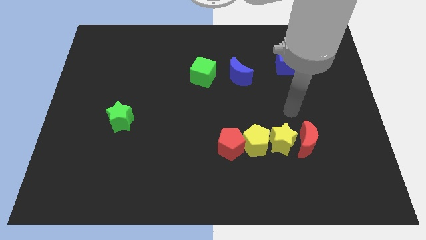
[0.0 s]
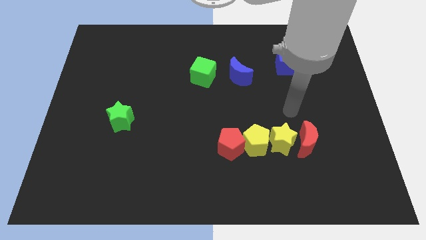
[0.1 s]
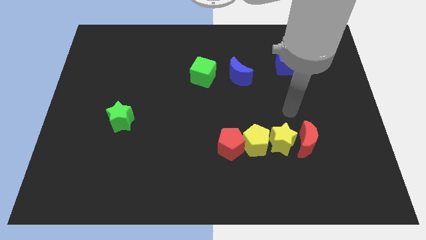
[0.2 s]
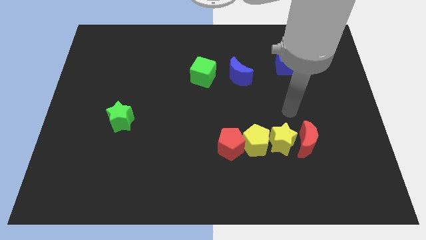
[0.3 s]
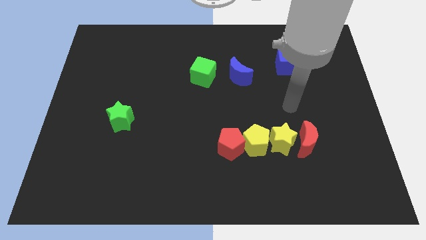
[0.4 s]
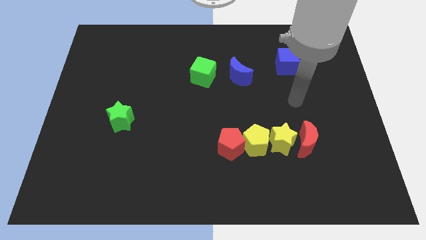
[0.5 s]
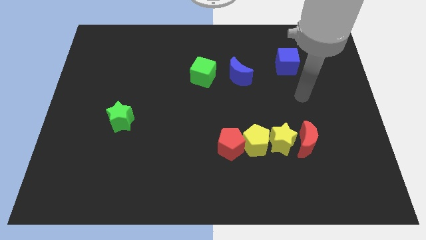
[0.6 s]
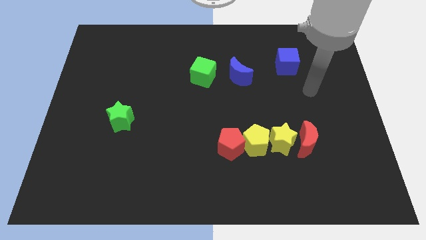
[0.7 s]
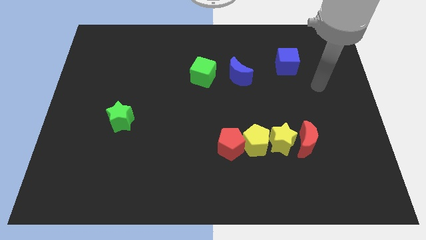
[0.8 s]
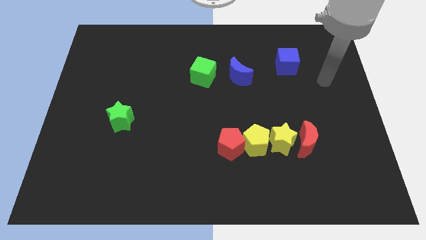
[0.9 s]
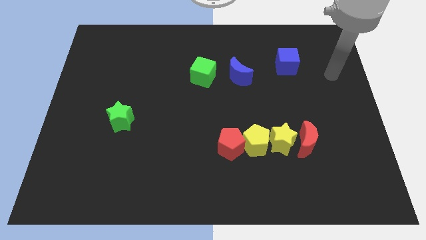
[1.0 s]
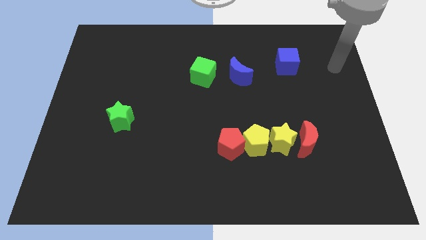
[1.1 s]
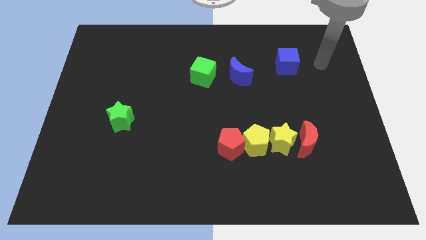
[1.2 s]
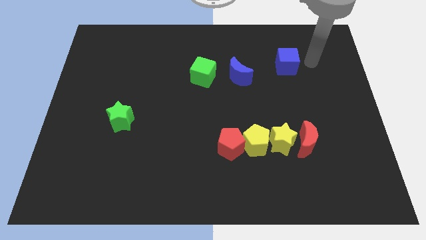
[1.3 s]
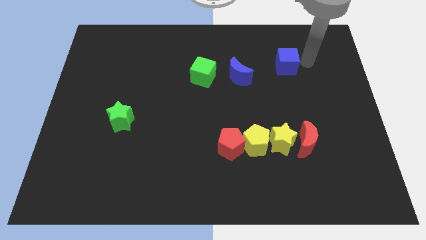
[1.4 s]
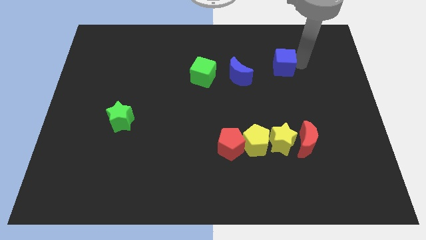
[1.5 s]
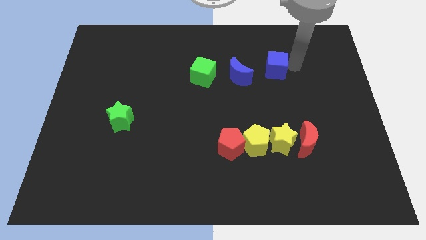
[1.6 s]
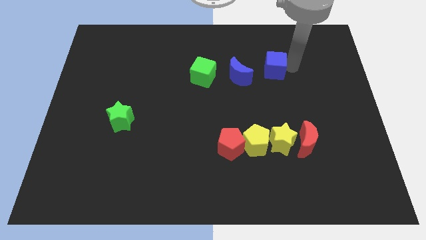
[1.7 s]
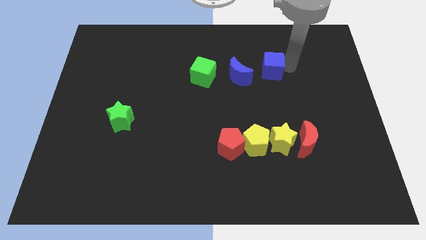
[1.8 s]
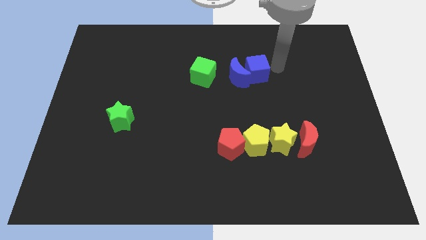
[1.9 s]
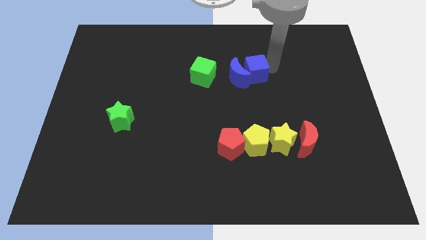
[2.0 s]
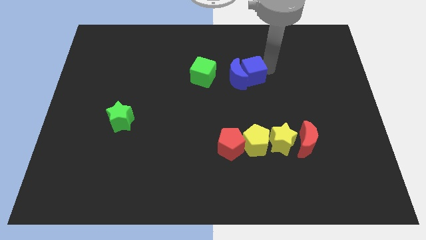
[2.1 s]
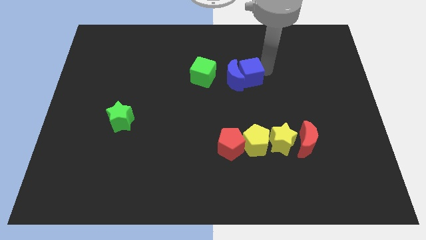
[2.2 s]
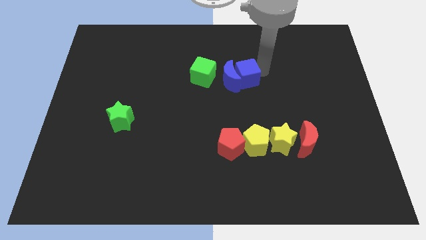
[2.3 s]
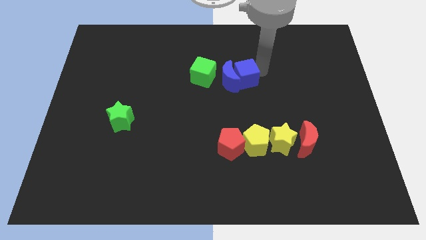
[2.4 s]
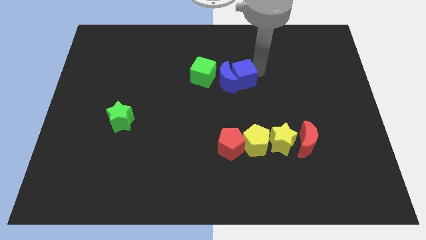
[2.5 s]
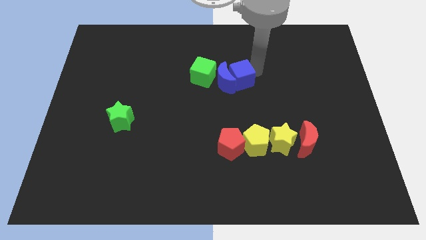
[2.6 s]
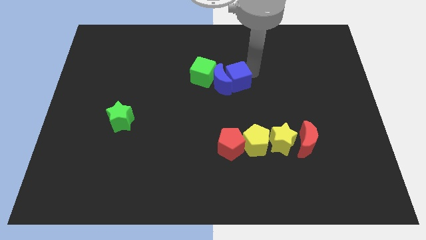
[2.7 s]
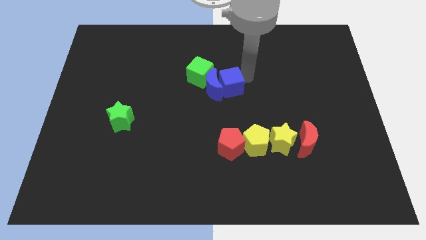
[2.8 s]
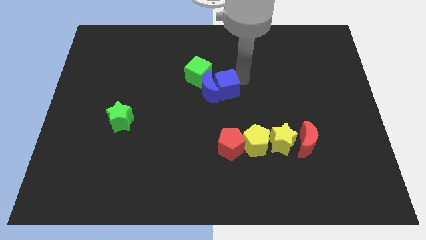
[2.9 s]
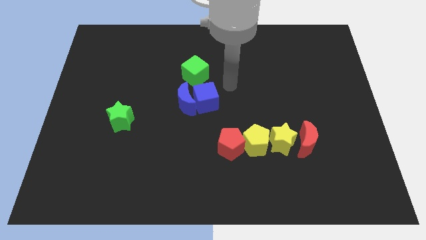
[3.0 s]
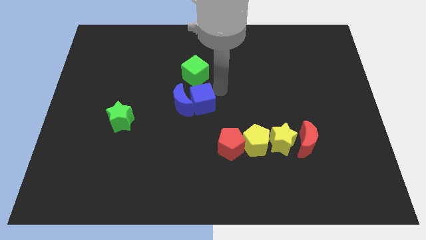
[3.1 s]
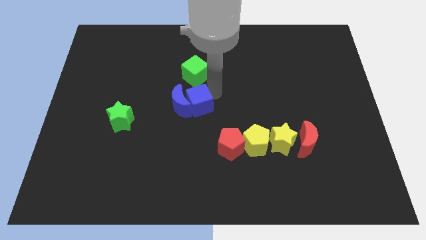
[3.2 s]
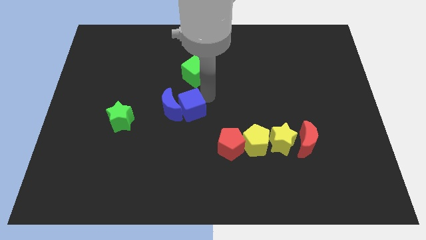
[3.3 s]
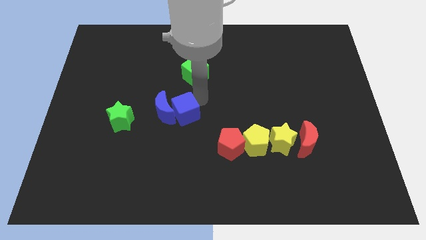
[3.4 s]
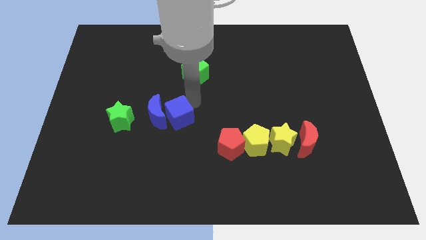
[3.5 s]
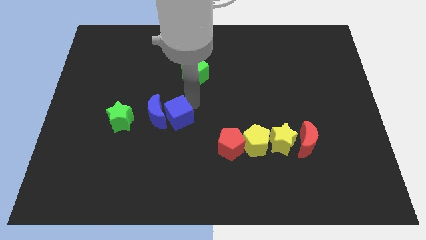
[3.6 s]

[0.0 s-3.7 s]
push the blue cube into the blue moon

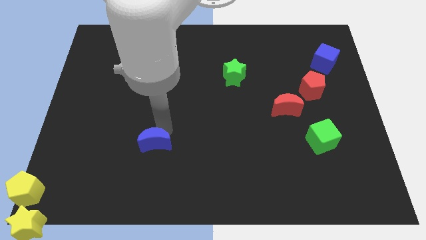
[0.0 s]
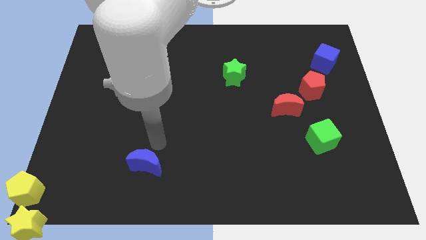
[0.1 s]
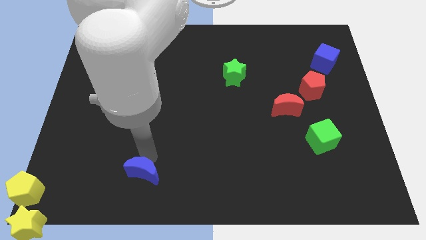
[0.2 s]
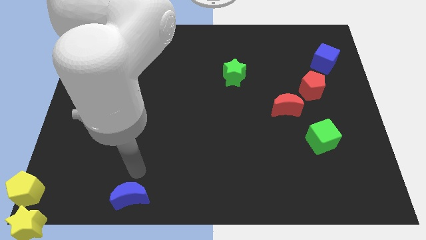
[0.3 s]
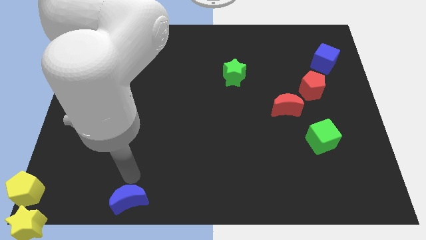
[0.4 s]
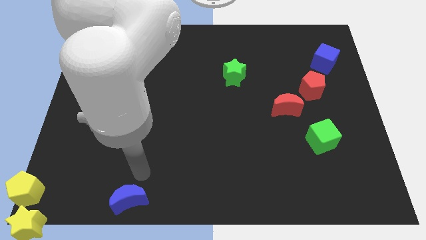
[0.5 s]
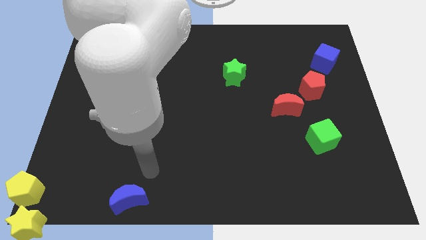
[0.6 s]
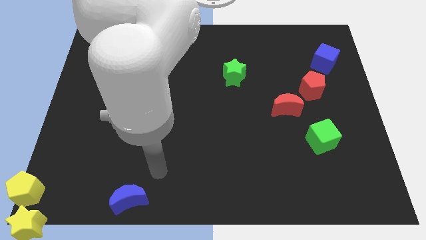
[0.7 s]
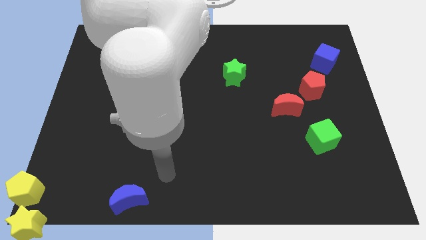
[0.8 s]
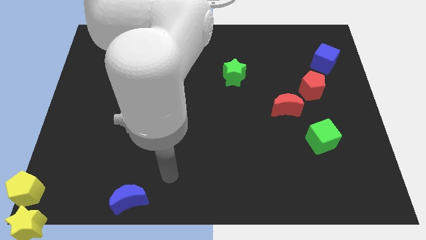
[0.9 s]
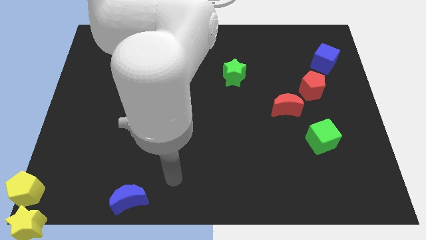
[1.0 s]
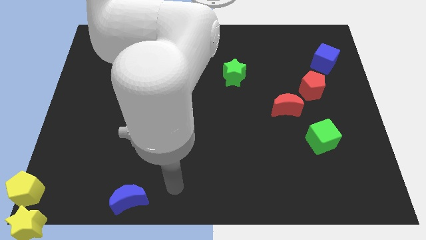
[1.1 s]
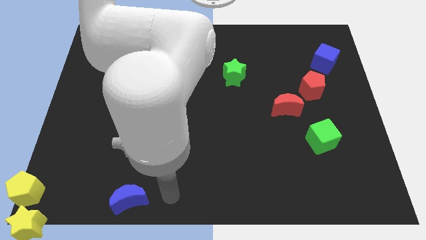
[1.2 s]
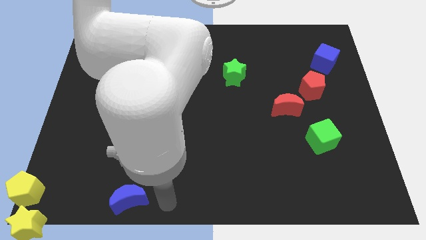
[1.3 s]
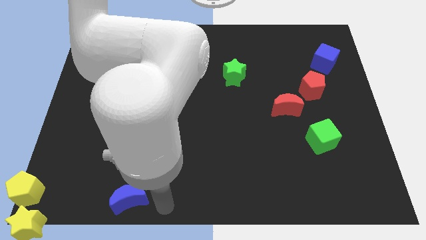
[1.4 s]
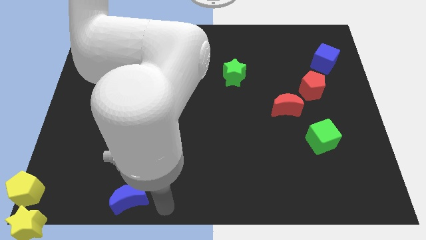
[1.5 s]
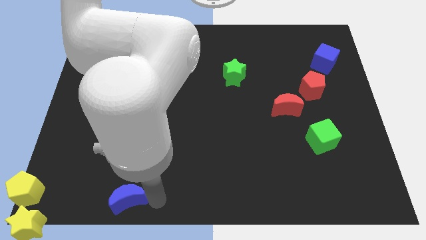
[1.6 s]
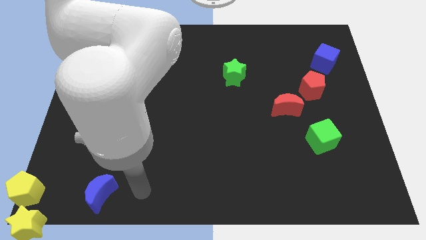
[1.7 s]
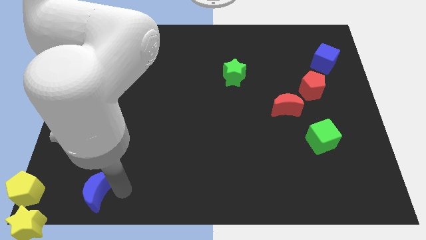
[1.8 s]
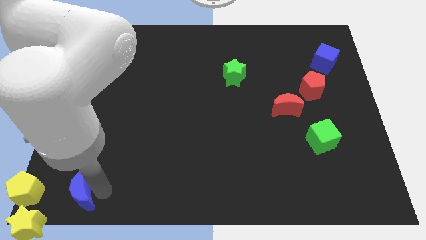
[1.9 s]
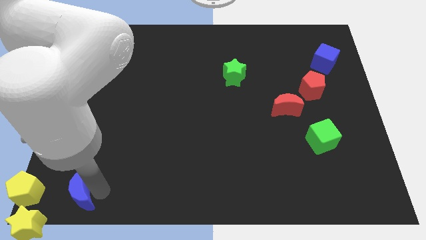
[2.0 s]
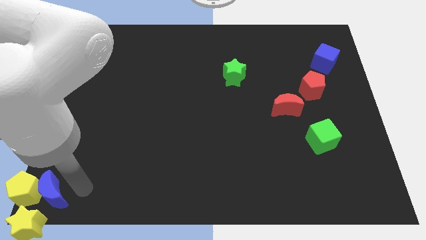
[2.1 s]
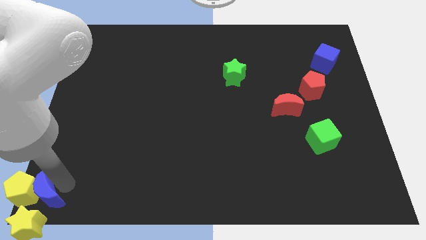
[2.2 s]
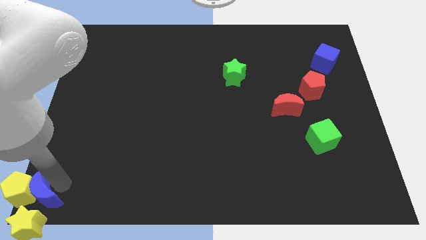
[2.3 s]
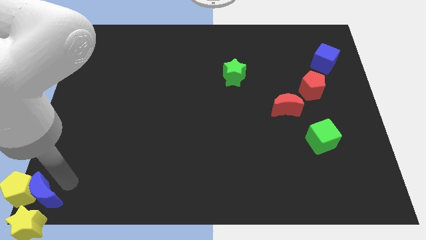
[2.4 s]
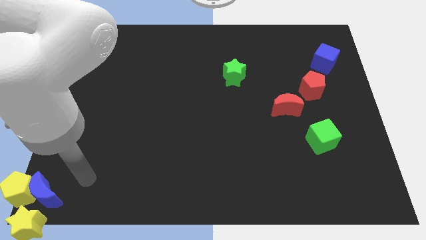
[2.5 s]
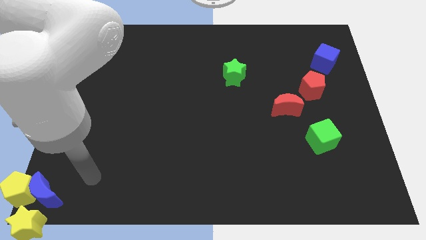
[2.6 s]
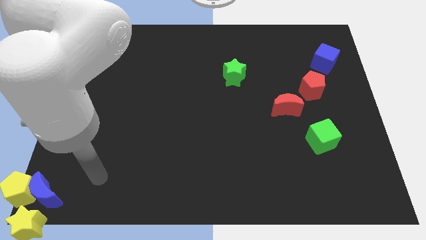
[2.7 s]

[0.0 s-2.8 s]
move blue moon into yellow pentagon

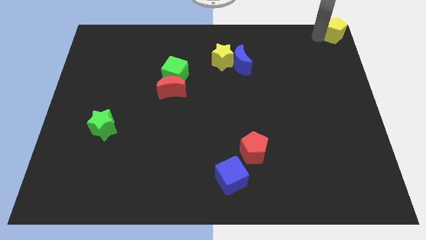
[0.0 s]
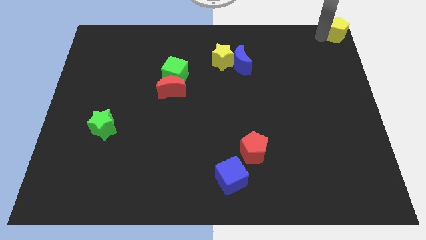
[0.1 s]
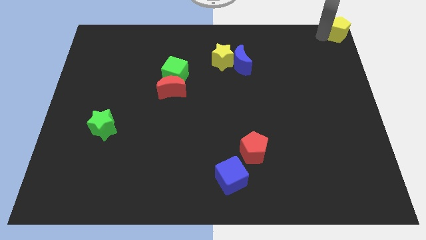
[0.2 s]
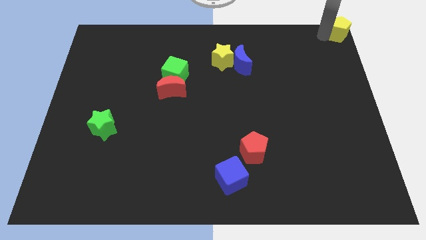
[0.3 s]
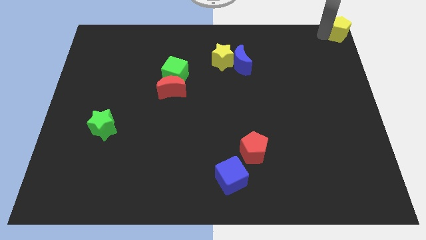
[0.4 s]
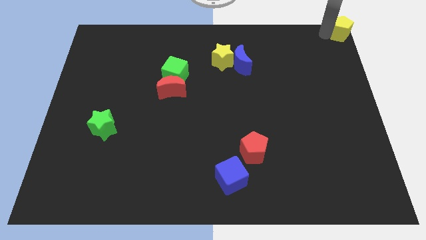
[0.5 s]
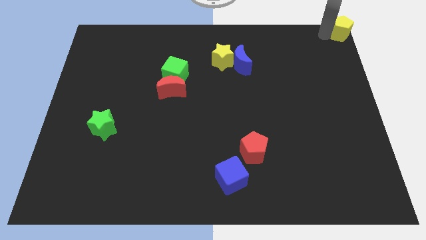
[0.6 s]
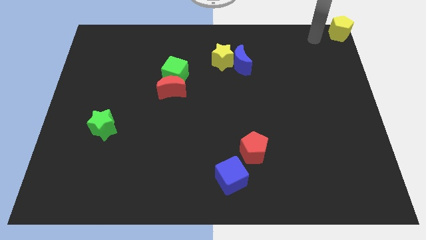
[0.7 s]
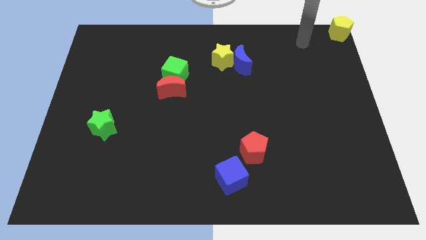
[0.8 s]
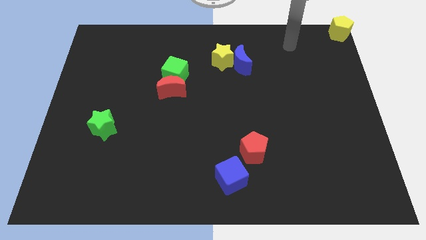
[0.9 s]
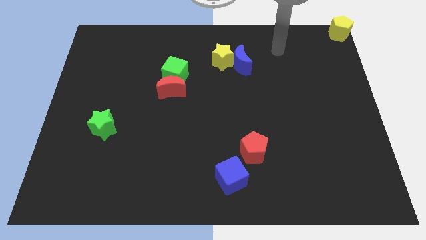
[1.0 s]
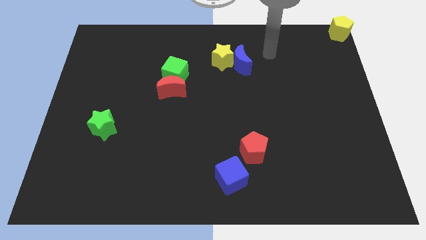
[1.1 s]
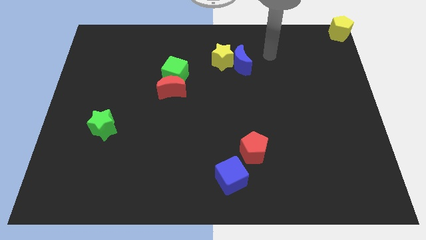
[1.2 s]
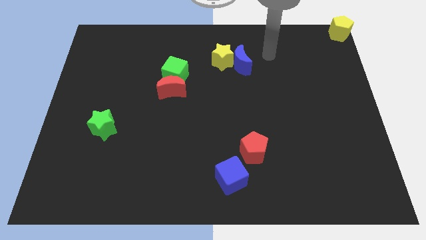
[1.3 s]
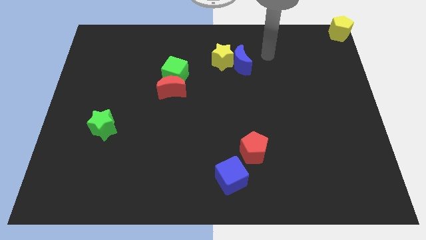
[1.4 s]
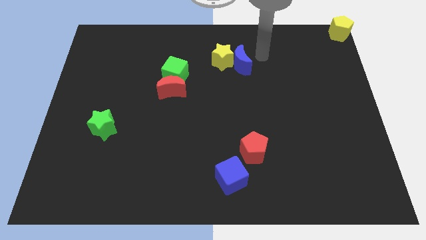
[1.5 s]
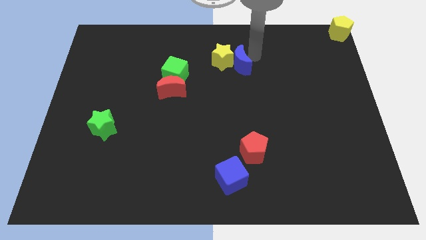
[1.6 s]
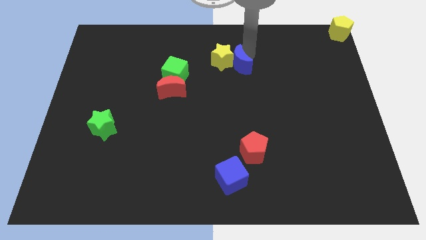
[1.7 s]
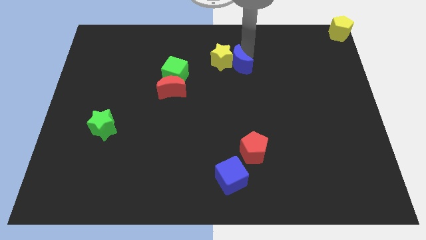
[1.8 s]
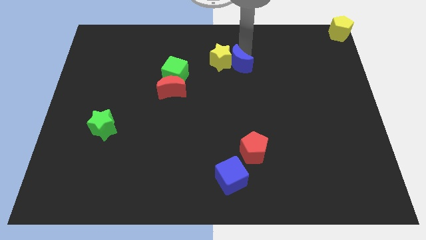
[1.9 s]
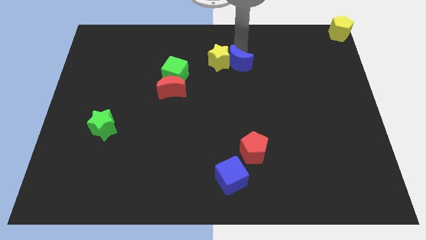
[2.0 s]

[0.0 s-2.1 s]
place your arm on the top of blue crescent

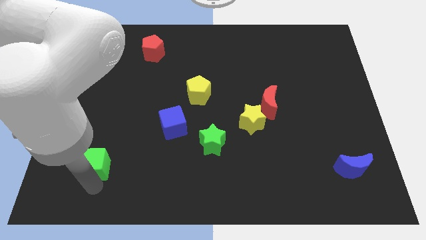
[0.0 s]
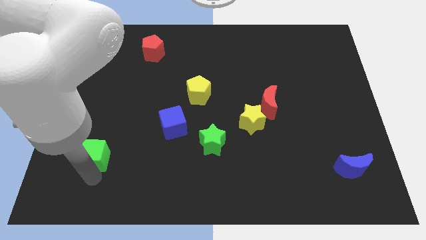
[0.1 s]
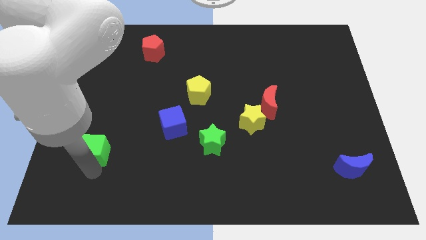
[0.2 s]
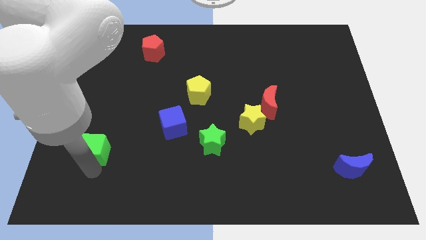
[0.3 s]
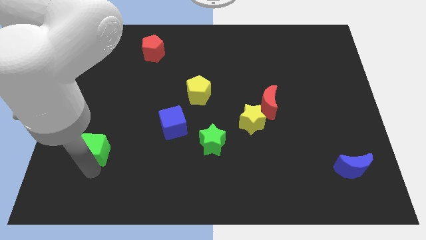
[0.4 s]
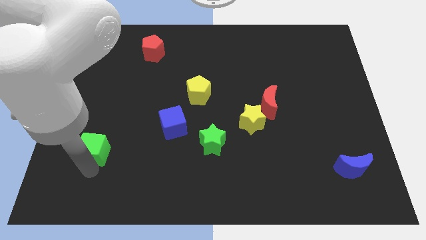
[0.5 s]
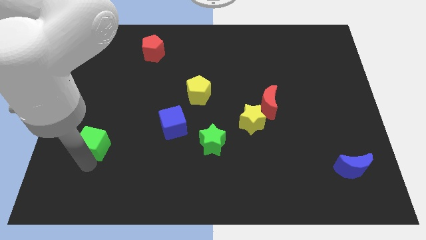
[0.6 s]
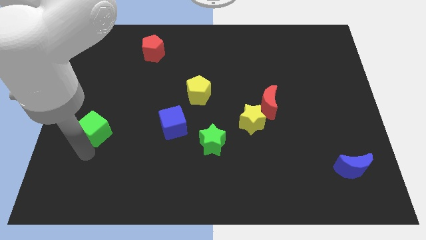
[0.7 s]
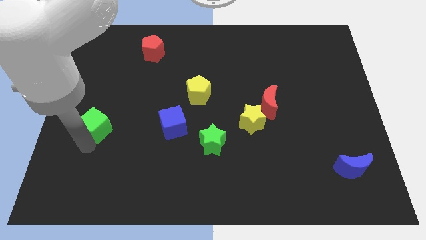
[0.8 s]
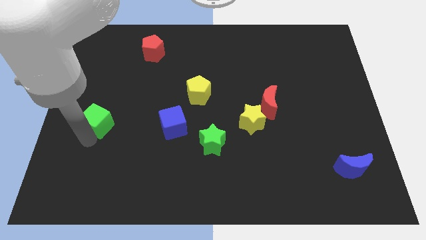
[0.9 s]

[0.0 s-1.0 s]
place the green cube horizontally to the left side of the blue cube
